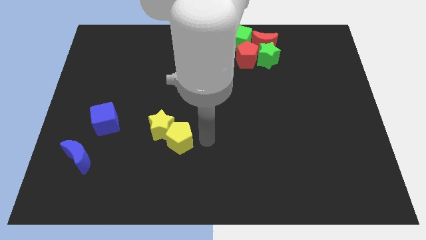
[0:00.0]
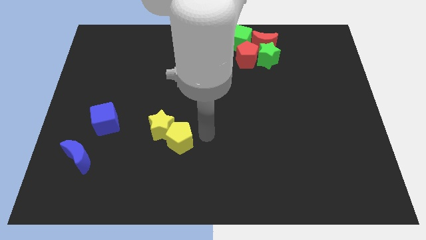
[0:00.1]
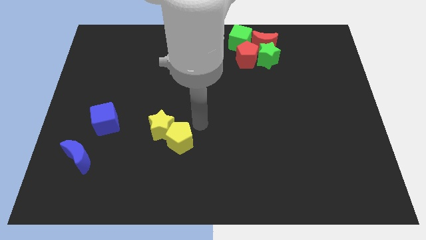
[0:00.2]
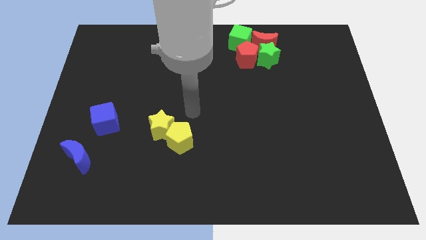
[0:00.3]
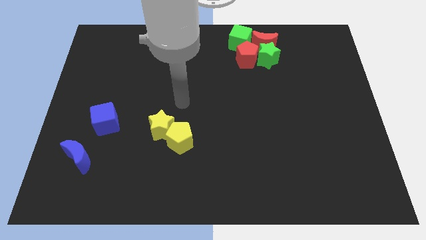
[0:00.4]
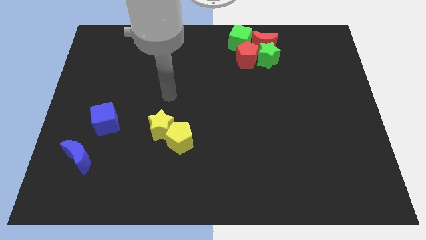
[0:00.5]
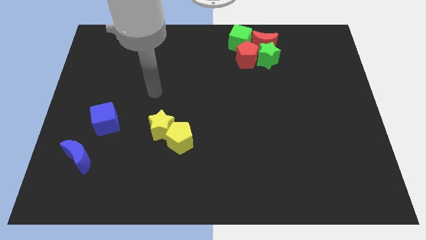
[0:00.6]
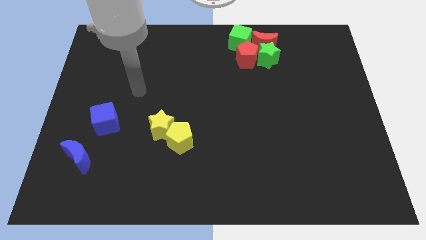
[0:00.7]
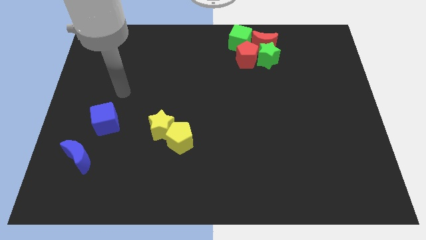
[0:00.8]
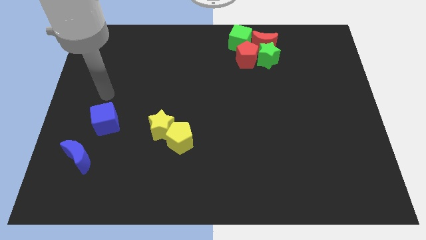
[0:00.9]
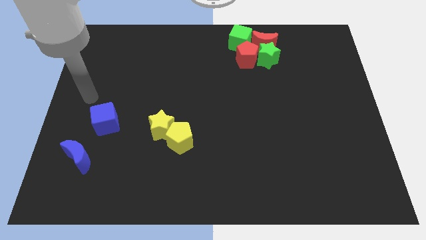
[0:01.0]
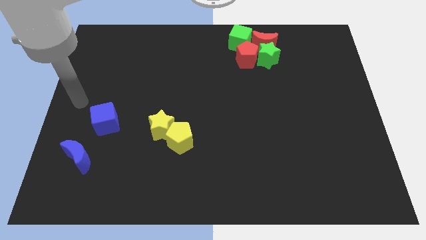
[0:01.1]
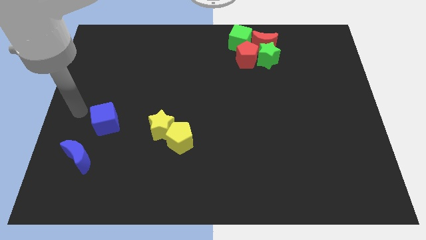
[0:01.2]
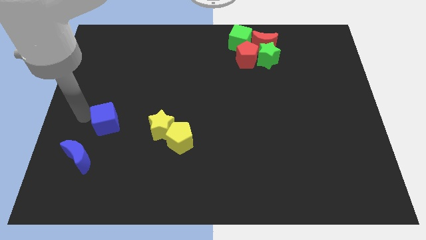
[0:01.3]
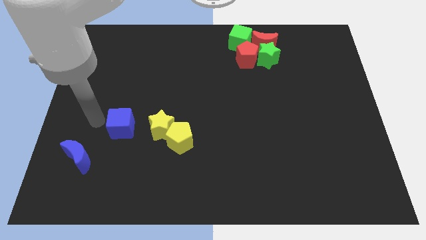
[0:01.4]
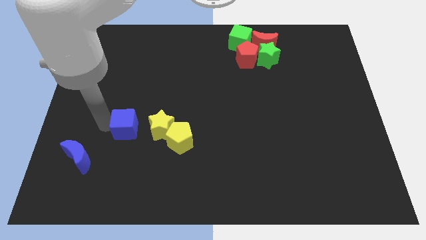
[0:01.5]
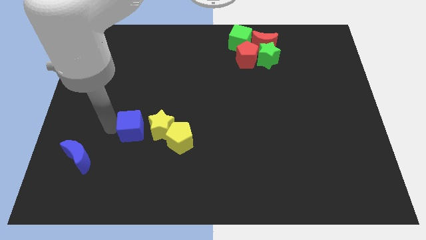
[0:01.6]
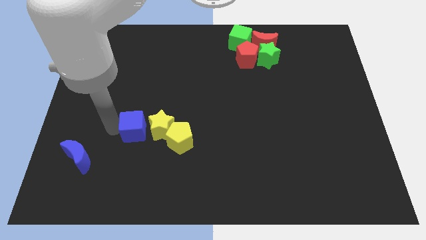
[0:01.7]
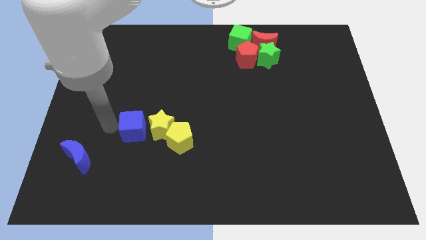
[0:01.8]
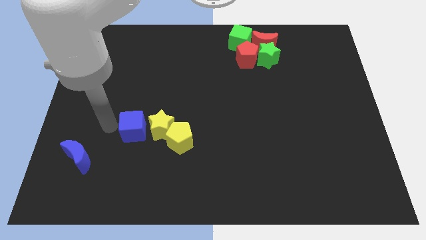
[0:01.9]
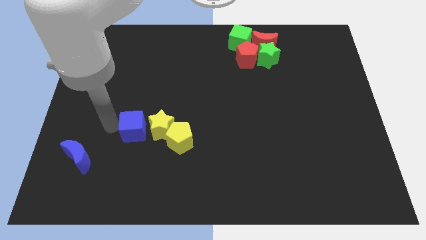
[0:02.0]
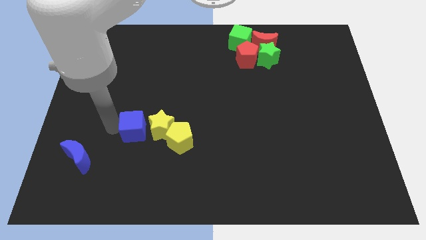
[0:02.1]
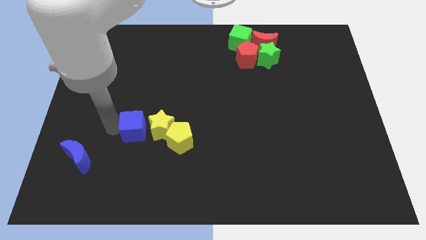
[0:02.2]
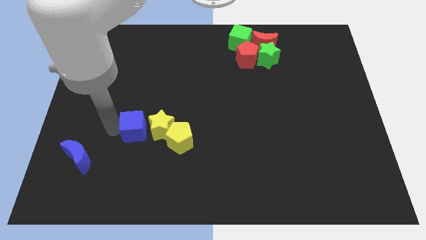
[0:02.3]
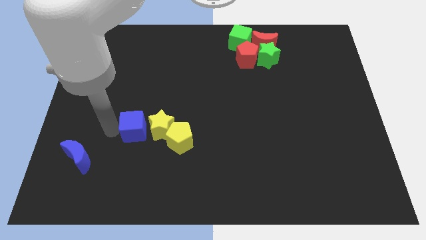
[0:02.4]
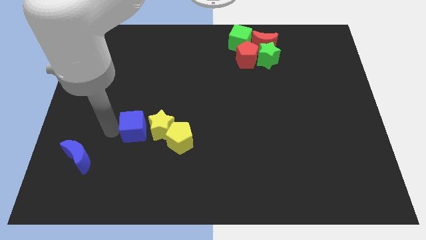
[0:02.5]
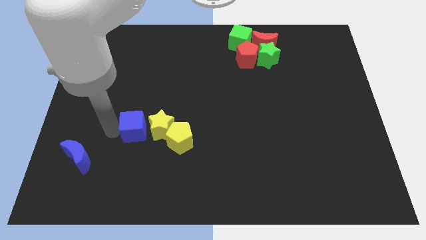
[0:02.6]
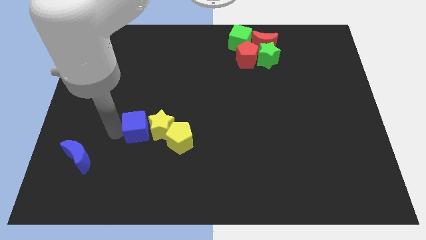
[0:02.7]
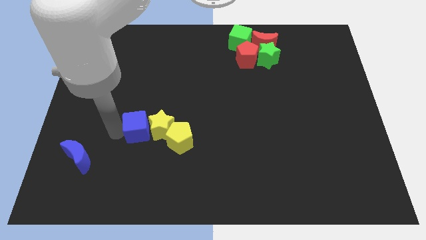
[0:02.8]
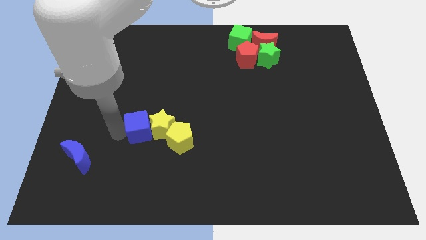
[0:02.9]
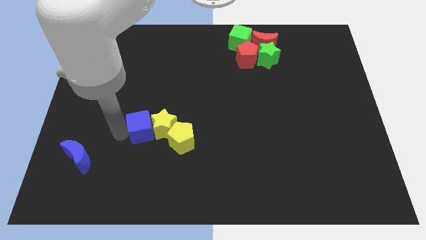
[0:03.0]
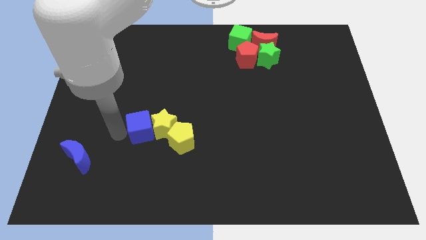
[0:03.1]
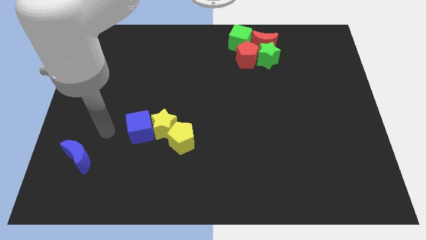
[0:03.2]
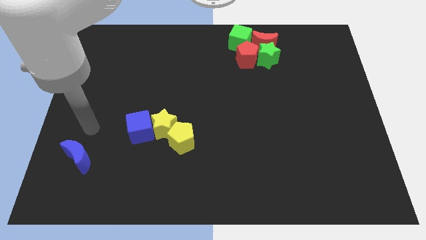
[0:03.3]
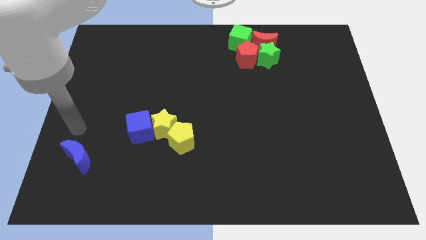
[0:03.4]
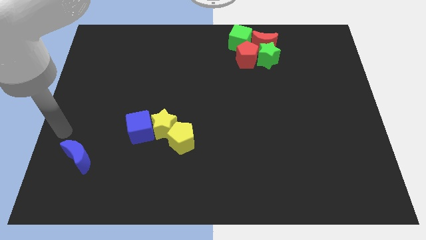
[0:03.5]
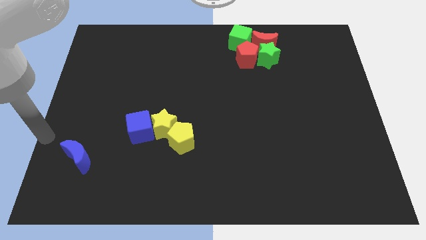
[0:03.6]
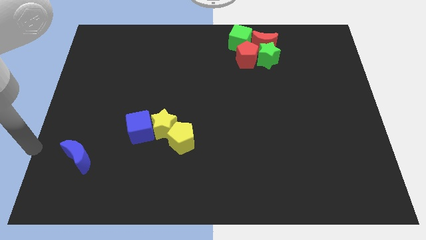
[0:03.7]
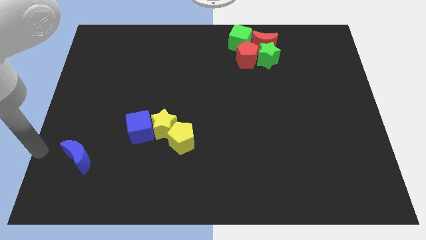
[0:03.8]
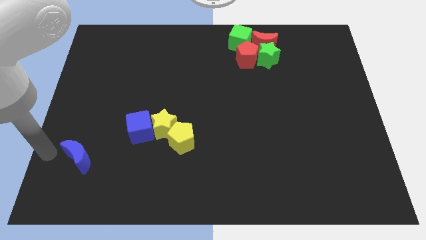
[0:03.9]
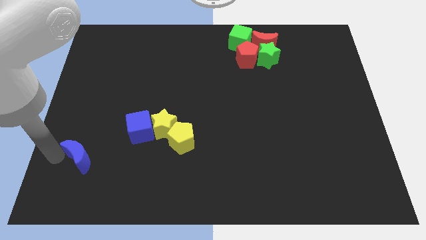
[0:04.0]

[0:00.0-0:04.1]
move your arm to the bottom left of the board

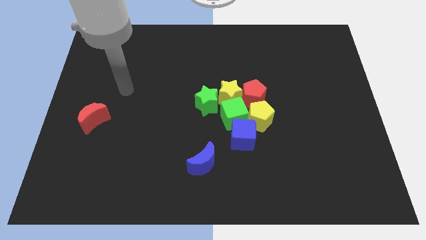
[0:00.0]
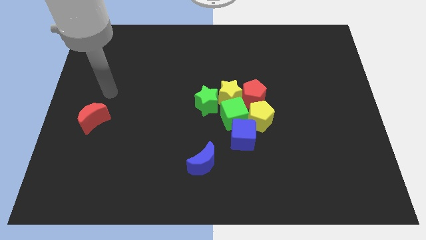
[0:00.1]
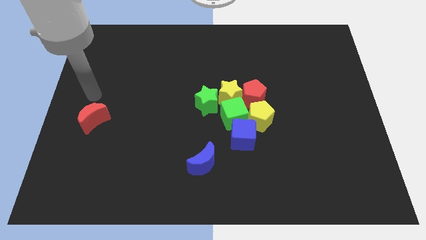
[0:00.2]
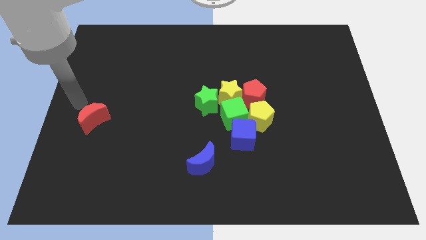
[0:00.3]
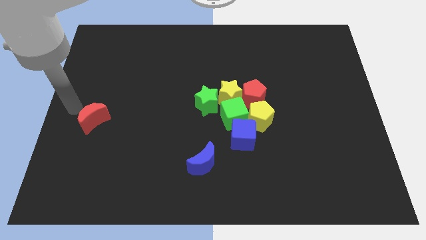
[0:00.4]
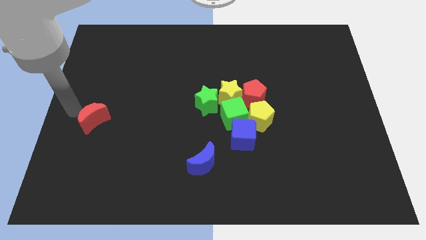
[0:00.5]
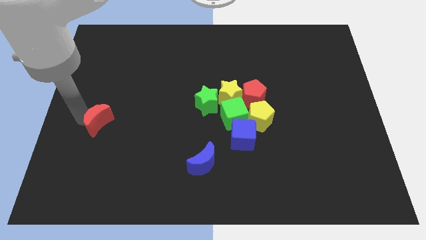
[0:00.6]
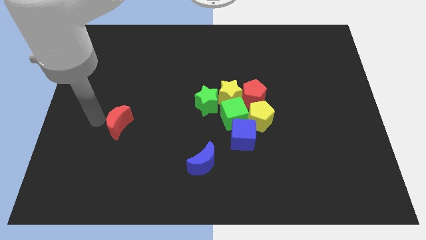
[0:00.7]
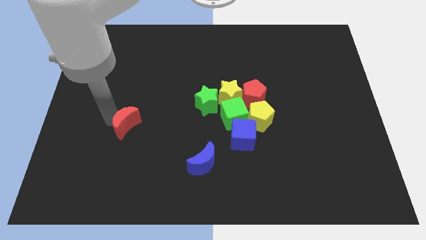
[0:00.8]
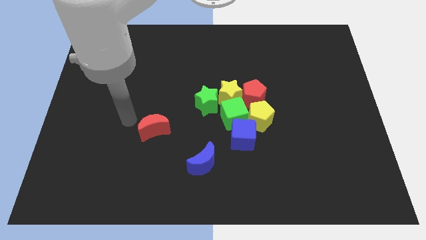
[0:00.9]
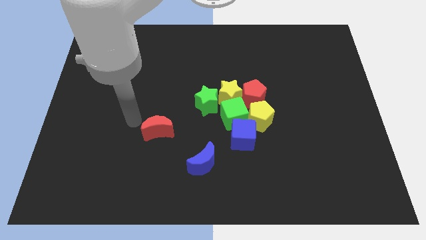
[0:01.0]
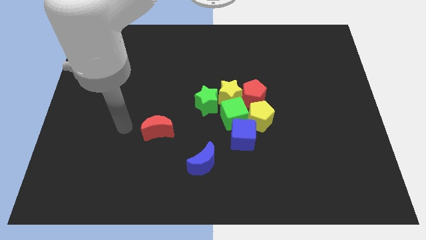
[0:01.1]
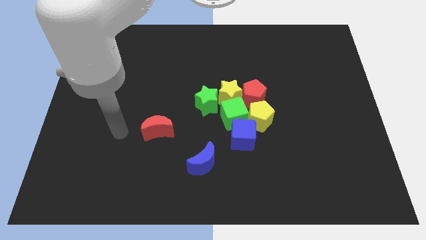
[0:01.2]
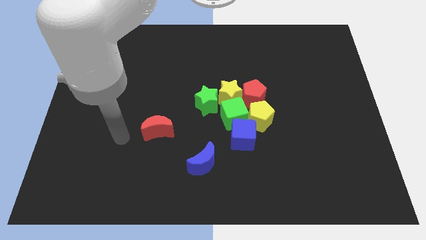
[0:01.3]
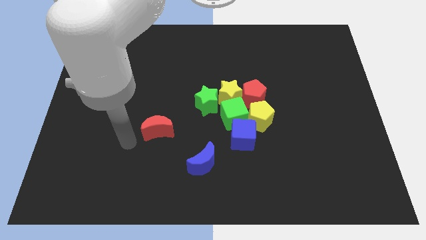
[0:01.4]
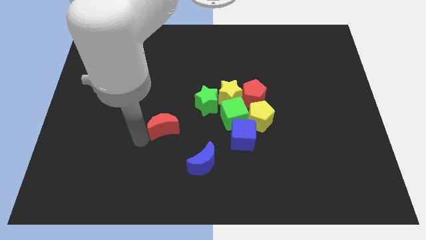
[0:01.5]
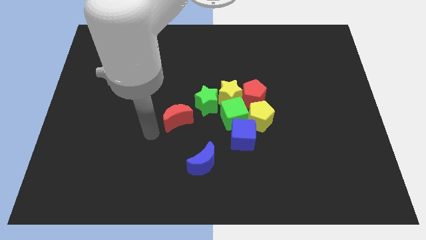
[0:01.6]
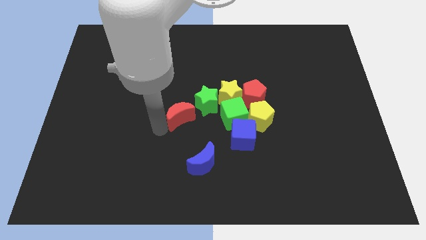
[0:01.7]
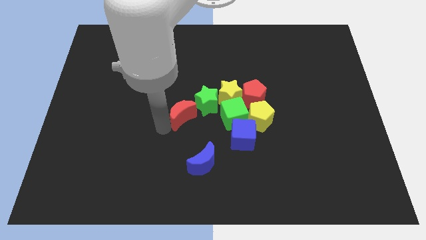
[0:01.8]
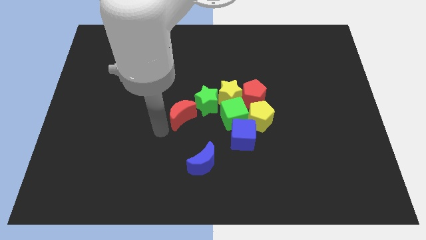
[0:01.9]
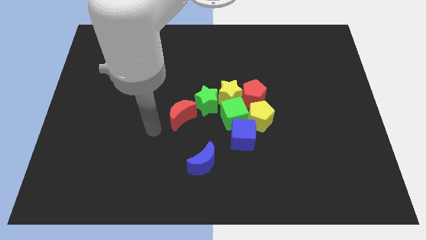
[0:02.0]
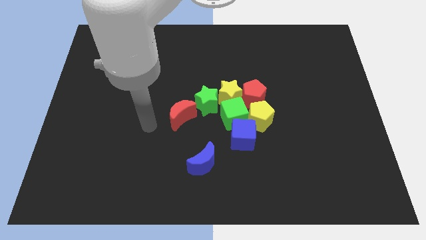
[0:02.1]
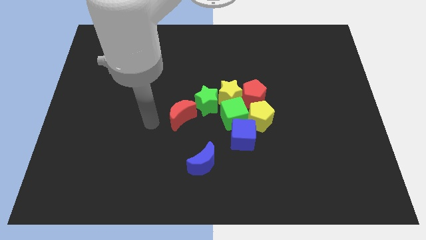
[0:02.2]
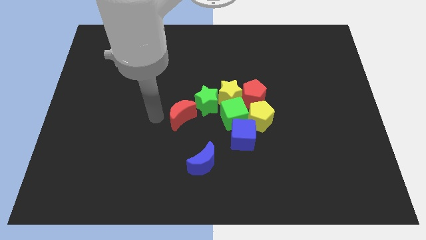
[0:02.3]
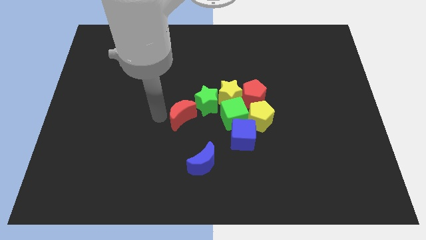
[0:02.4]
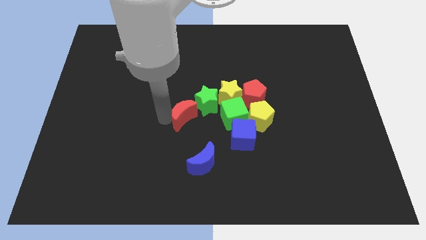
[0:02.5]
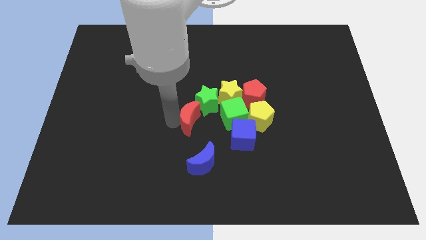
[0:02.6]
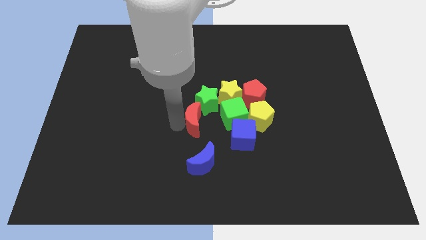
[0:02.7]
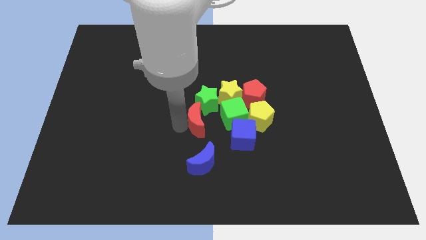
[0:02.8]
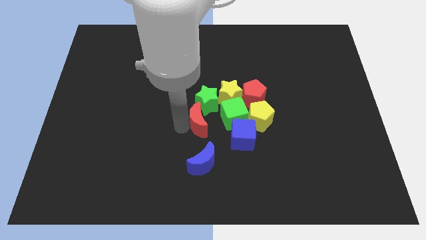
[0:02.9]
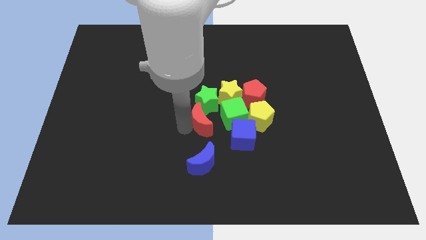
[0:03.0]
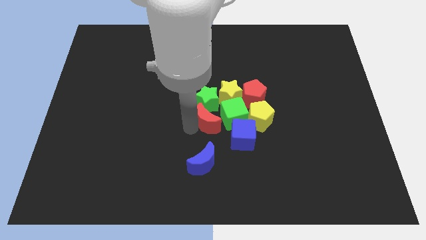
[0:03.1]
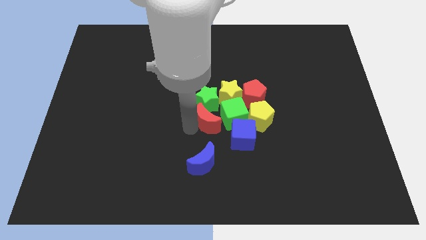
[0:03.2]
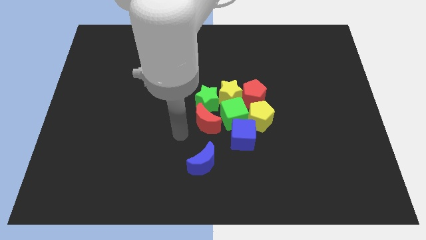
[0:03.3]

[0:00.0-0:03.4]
push the red crescent to the center

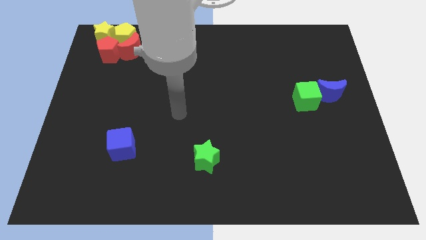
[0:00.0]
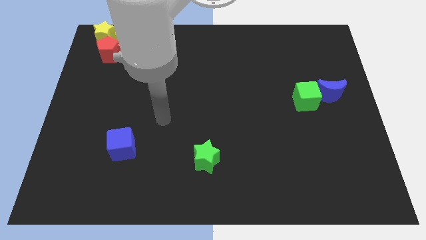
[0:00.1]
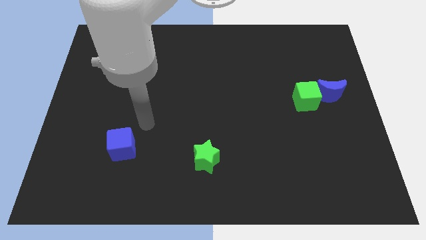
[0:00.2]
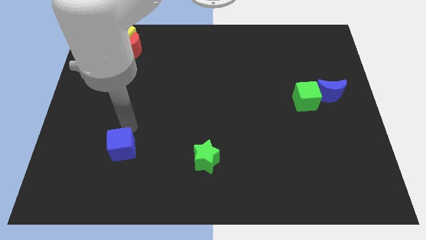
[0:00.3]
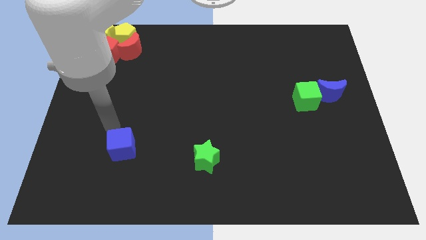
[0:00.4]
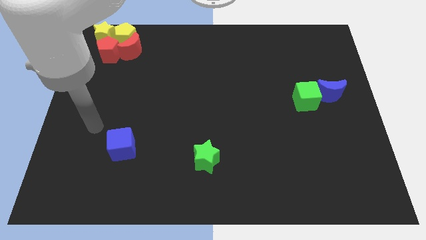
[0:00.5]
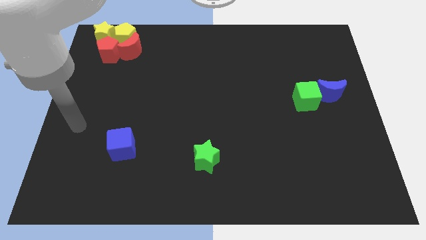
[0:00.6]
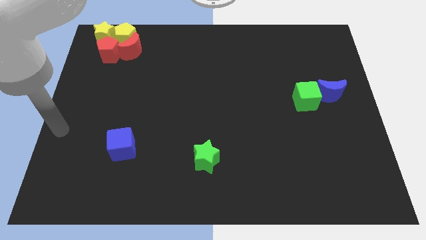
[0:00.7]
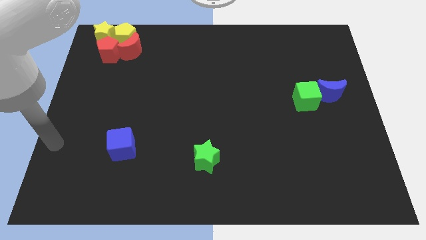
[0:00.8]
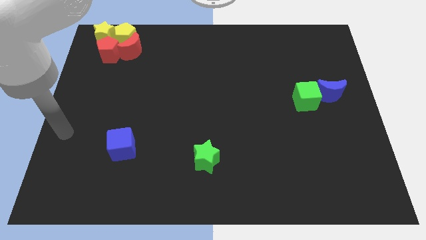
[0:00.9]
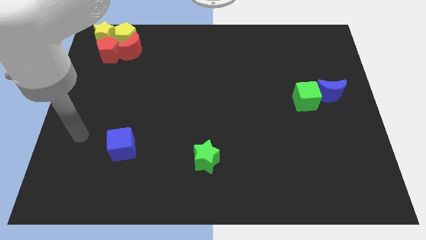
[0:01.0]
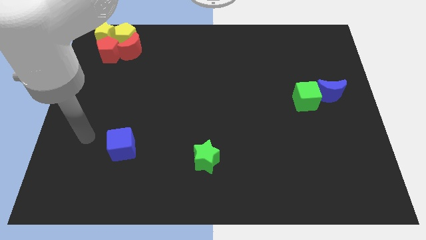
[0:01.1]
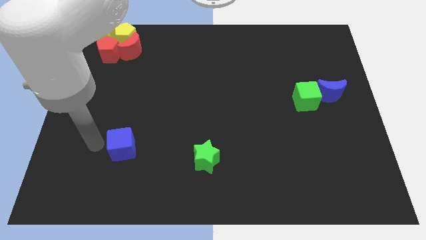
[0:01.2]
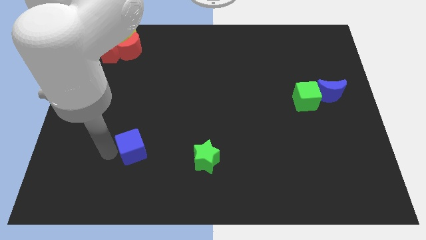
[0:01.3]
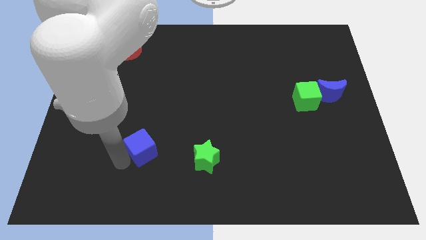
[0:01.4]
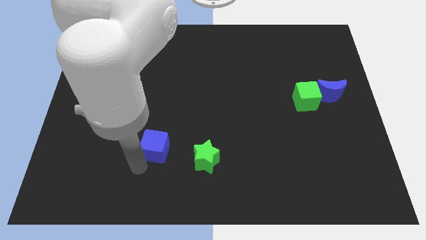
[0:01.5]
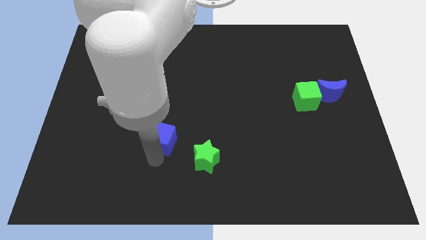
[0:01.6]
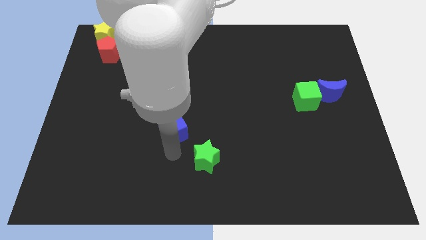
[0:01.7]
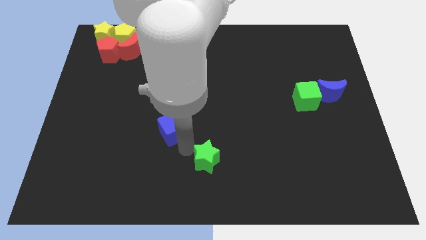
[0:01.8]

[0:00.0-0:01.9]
push the blue cube diagonally above the green star
